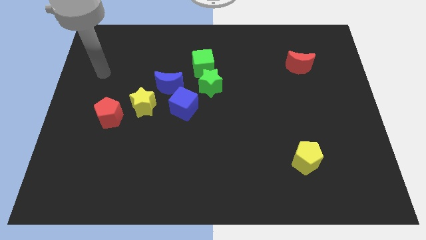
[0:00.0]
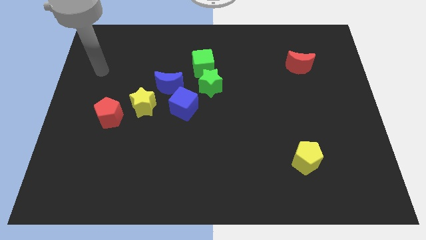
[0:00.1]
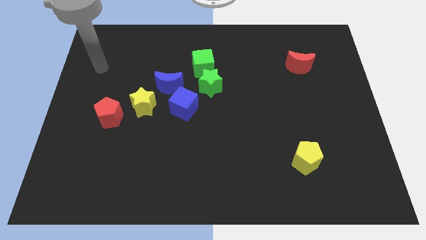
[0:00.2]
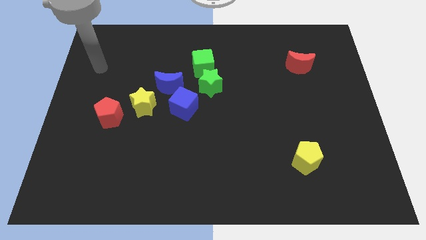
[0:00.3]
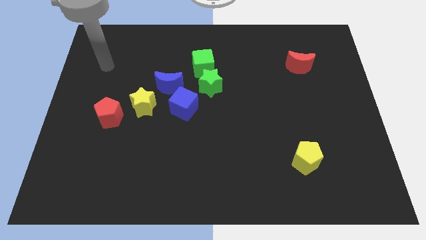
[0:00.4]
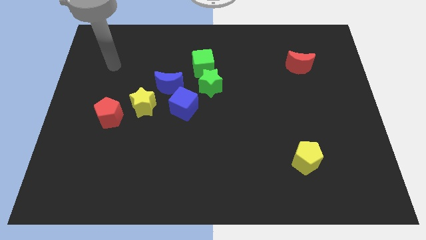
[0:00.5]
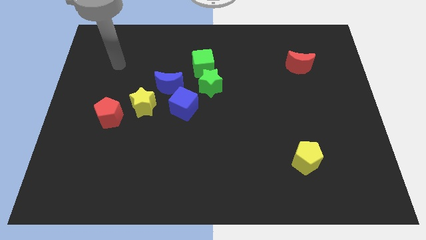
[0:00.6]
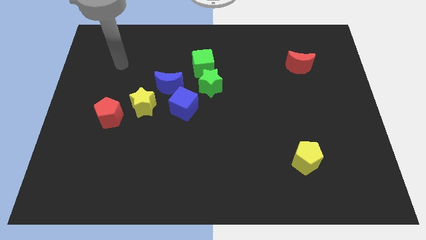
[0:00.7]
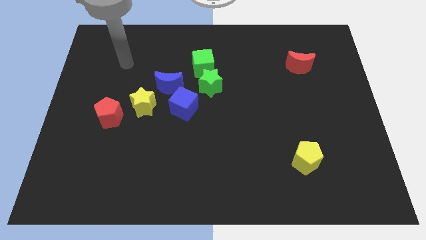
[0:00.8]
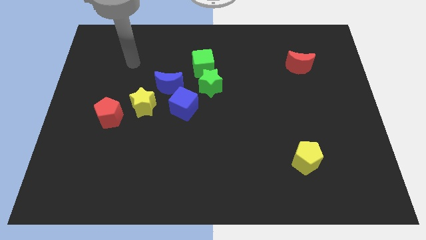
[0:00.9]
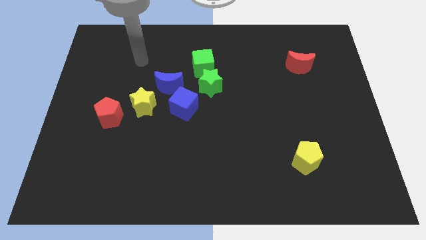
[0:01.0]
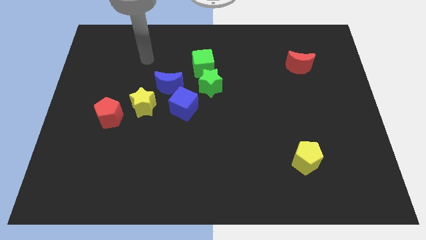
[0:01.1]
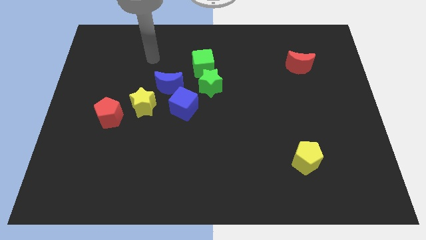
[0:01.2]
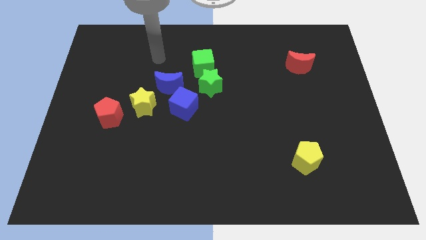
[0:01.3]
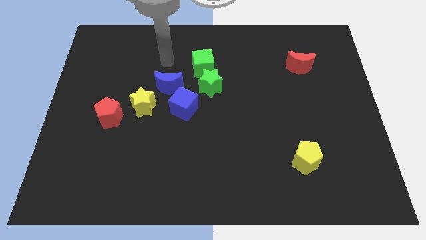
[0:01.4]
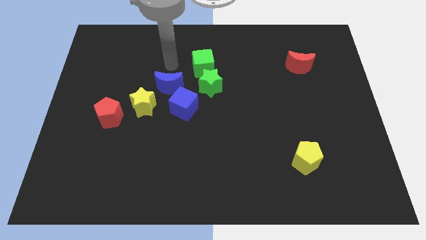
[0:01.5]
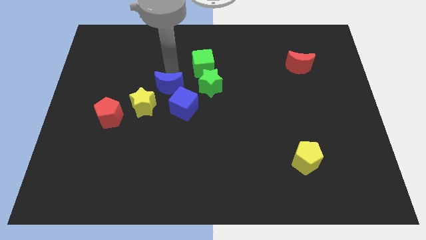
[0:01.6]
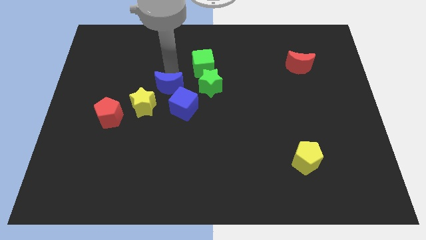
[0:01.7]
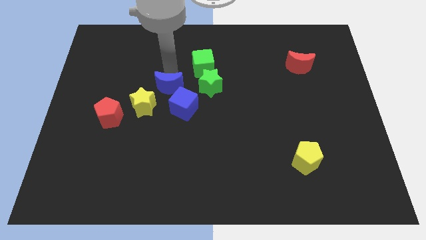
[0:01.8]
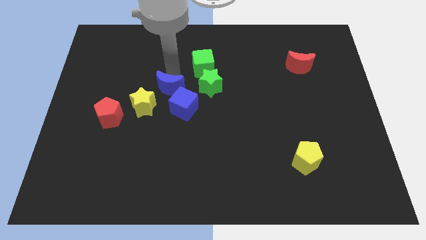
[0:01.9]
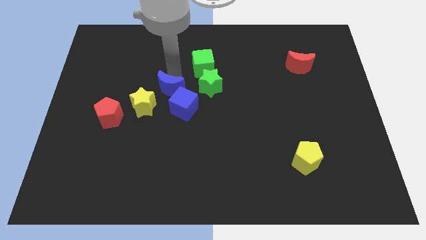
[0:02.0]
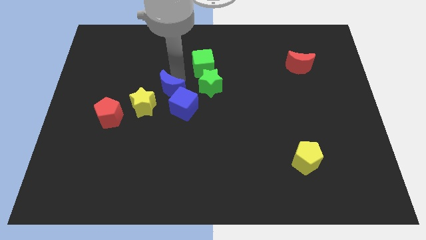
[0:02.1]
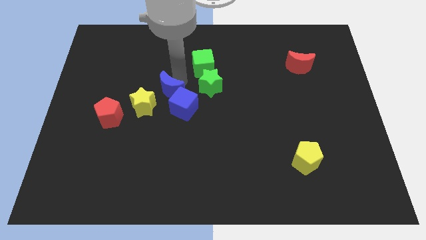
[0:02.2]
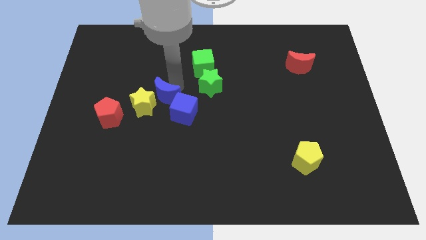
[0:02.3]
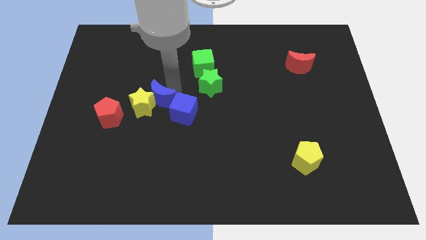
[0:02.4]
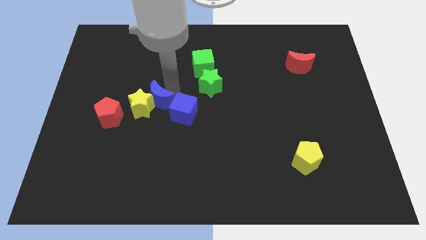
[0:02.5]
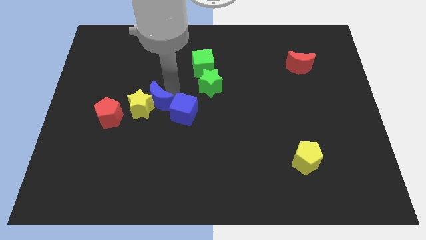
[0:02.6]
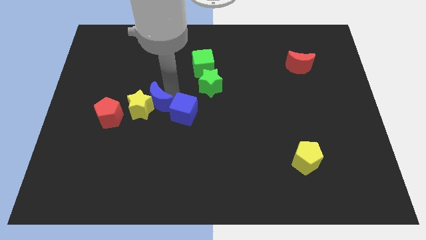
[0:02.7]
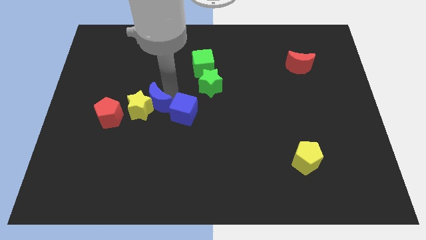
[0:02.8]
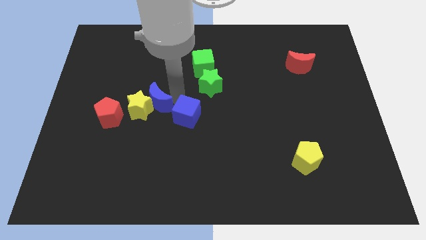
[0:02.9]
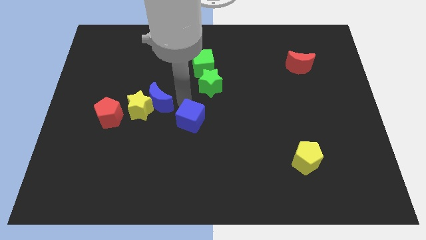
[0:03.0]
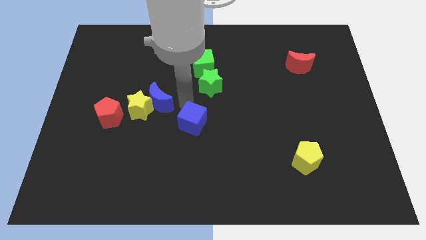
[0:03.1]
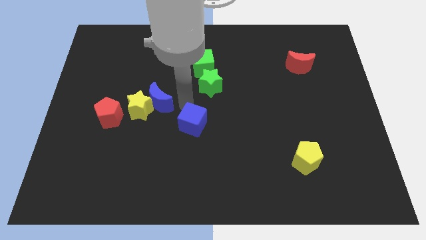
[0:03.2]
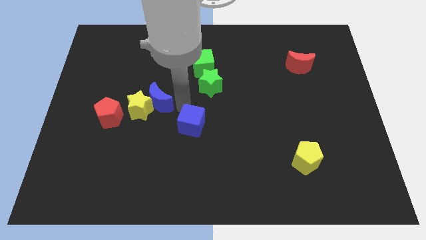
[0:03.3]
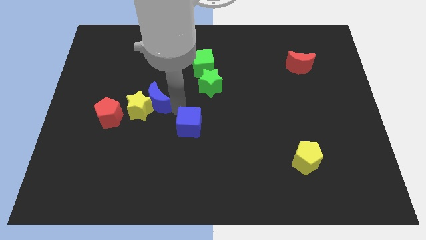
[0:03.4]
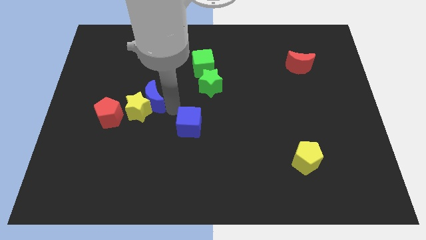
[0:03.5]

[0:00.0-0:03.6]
move the blue blocks towards the bottom side of the board

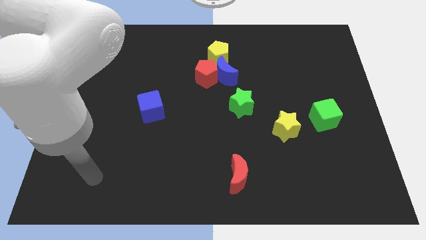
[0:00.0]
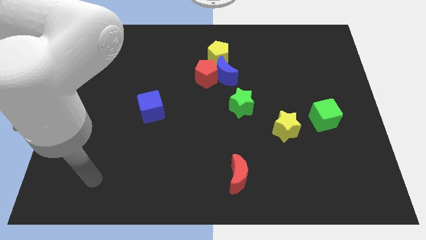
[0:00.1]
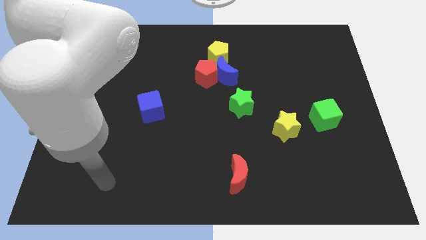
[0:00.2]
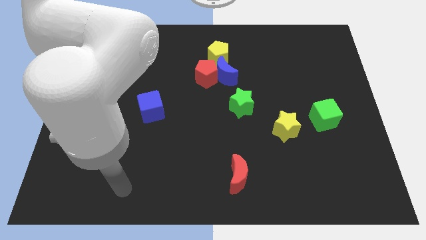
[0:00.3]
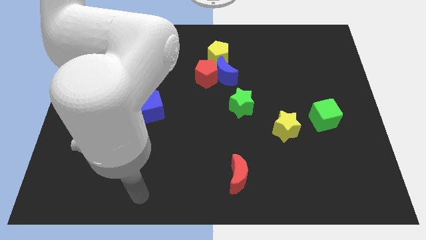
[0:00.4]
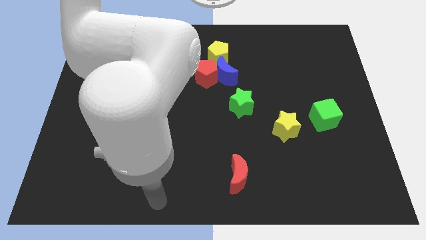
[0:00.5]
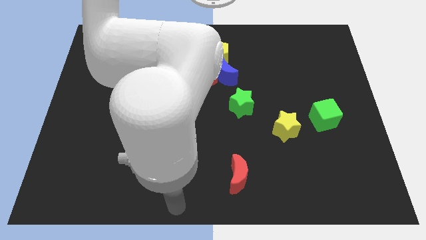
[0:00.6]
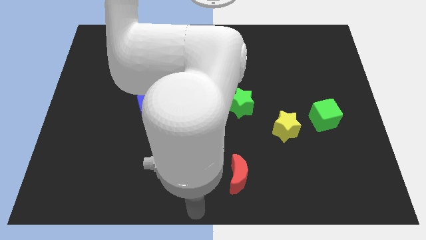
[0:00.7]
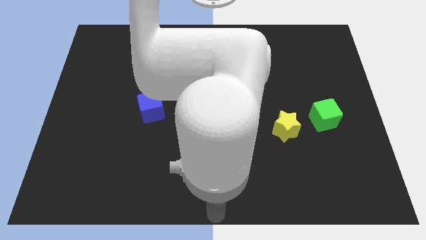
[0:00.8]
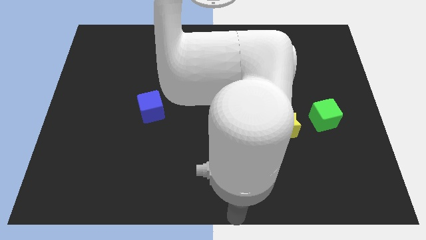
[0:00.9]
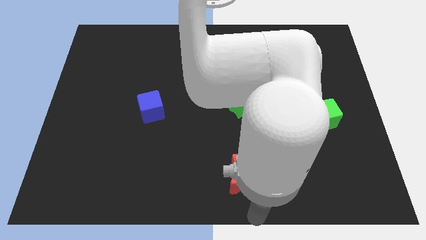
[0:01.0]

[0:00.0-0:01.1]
move arm to the bottom of red crescent

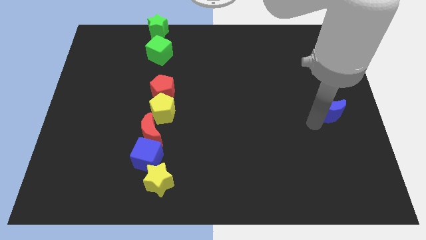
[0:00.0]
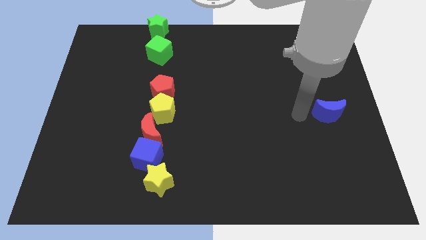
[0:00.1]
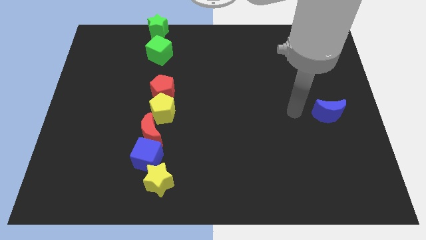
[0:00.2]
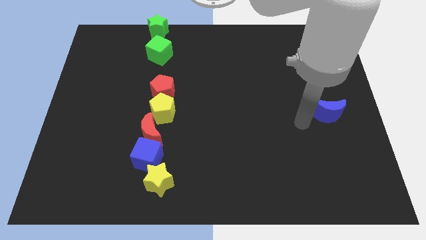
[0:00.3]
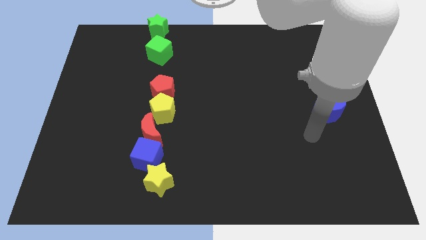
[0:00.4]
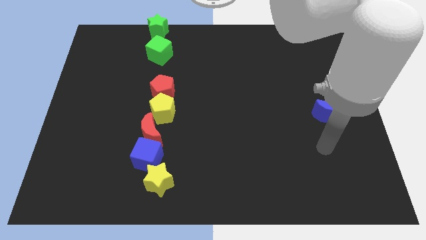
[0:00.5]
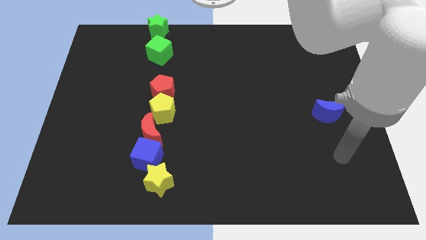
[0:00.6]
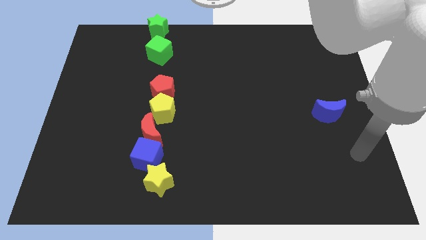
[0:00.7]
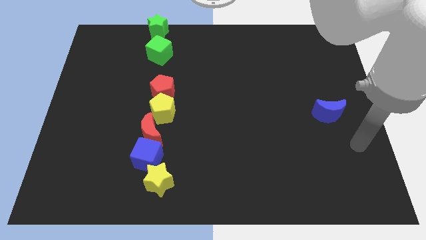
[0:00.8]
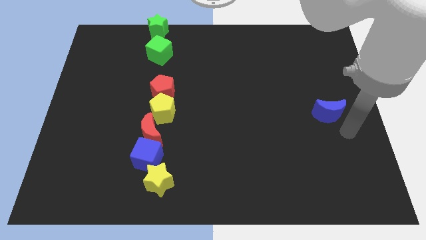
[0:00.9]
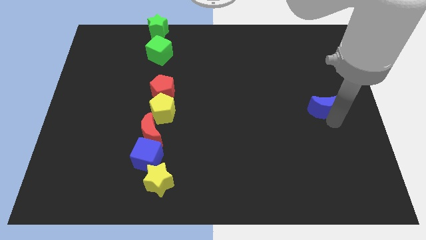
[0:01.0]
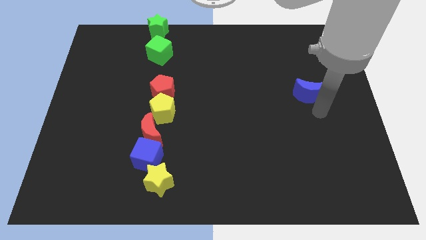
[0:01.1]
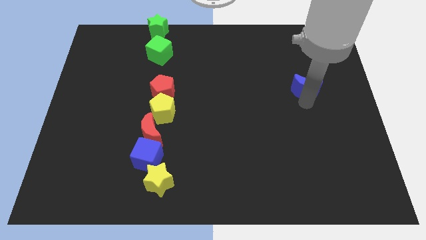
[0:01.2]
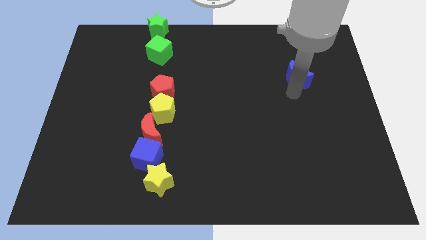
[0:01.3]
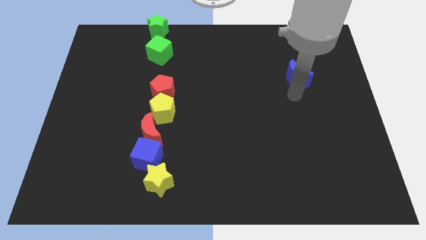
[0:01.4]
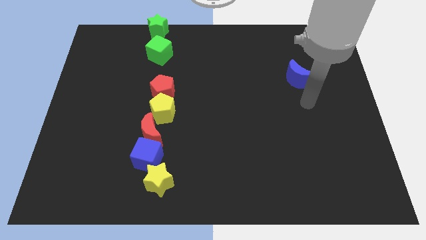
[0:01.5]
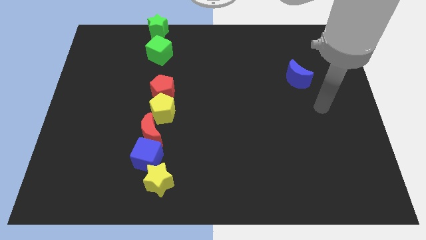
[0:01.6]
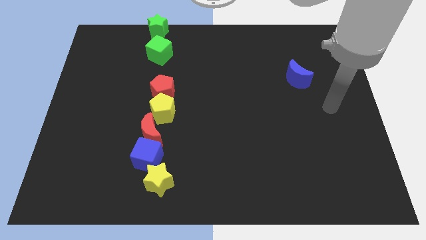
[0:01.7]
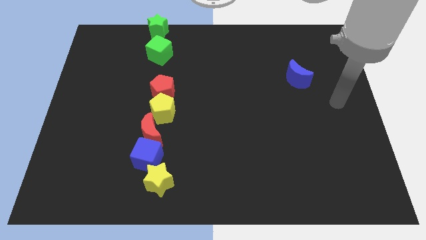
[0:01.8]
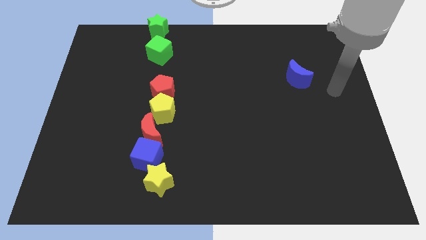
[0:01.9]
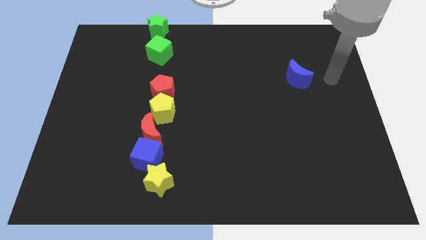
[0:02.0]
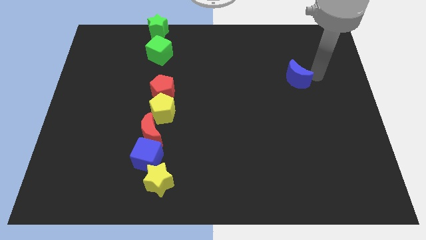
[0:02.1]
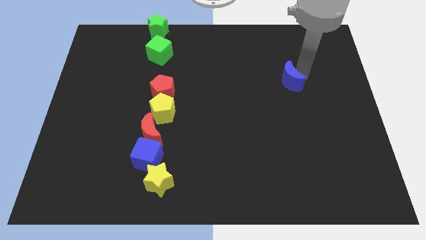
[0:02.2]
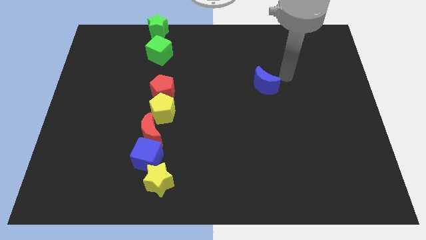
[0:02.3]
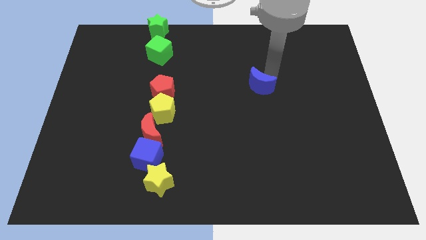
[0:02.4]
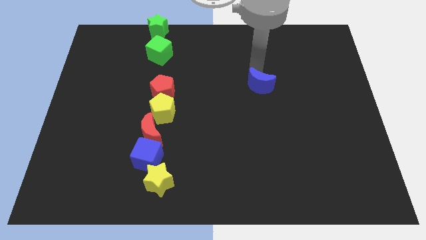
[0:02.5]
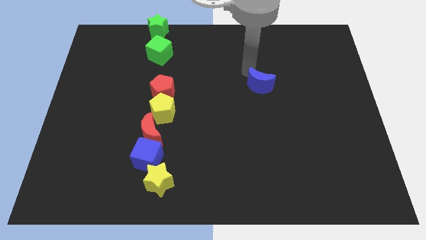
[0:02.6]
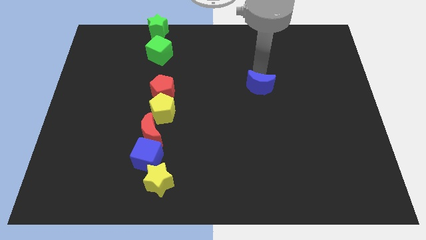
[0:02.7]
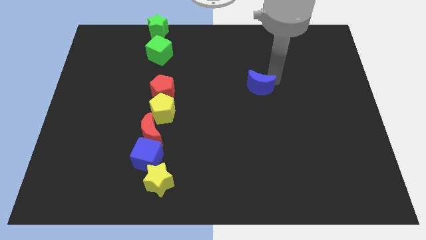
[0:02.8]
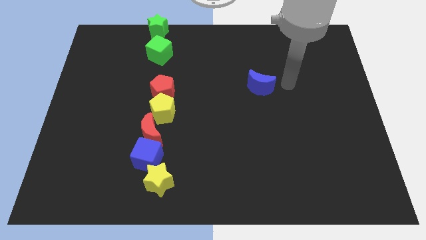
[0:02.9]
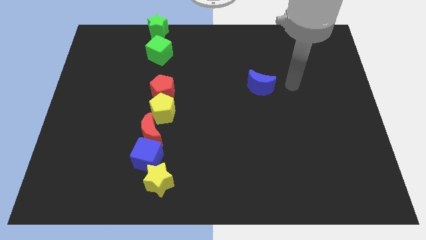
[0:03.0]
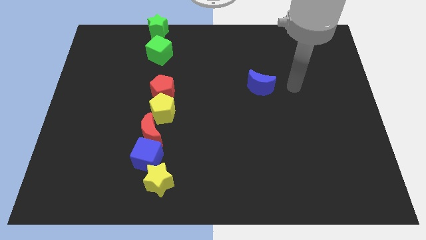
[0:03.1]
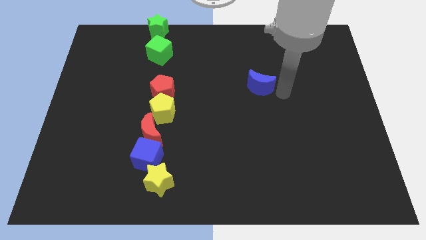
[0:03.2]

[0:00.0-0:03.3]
move blue moon towards the center

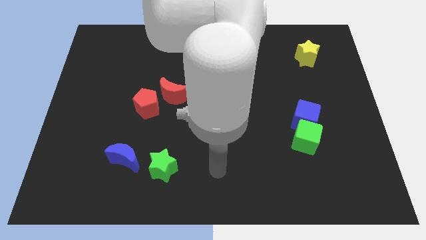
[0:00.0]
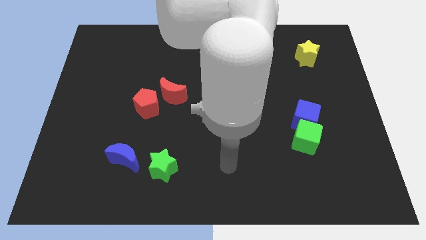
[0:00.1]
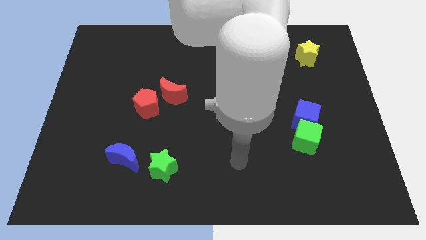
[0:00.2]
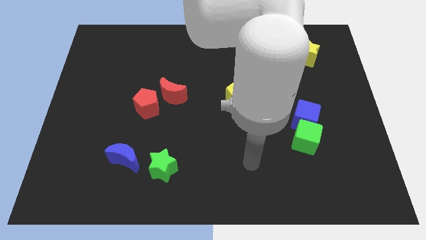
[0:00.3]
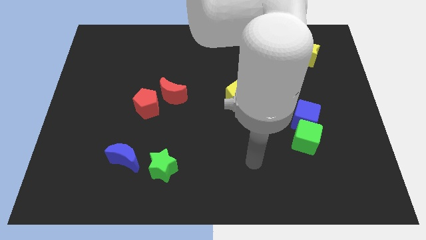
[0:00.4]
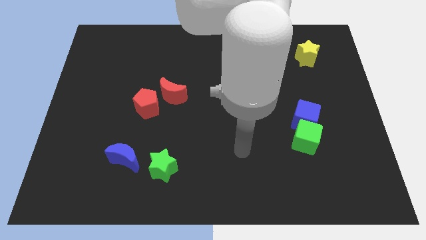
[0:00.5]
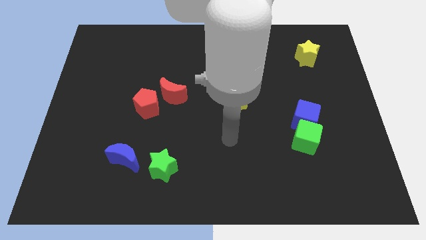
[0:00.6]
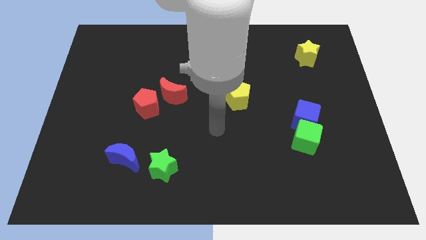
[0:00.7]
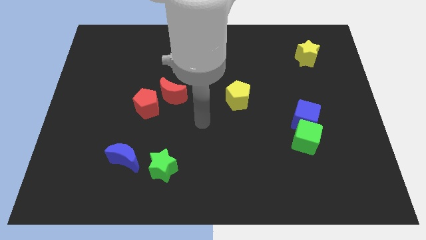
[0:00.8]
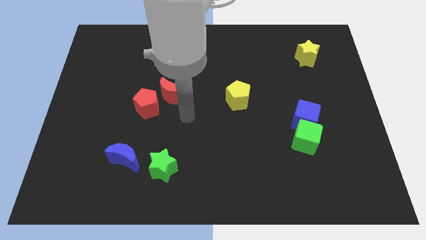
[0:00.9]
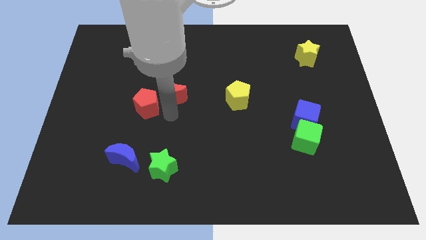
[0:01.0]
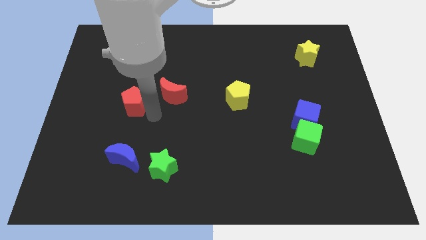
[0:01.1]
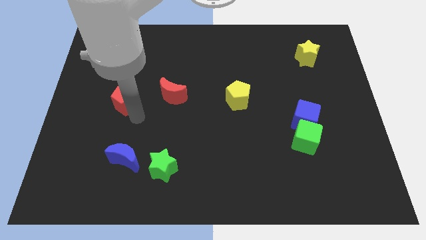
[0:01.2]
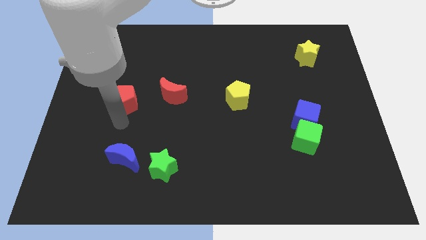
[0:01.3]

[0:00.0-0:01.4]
slide the red pentagon to the left side of the board
